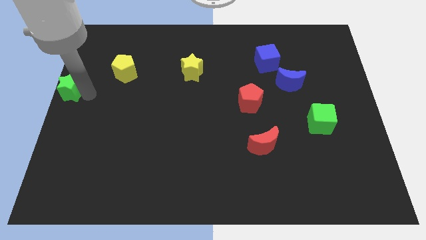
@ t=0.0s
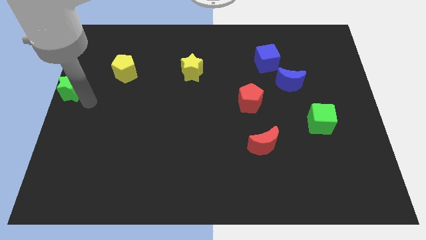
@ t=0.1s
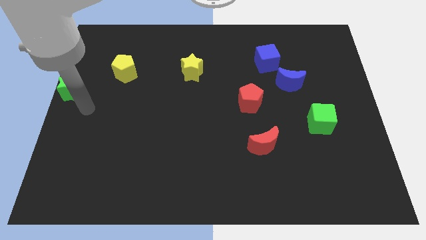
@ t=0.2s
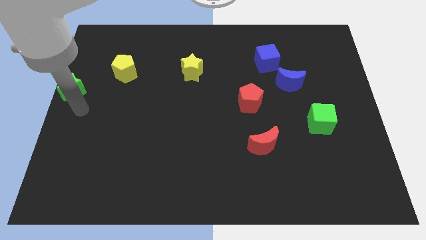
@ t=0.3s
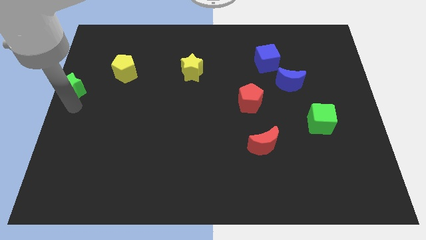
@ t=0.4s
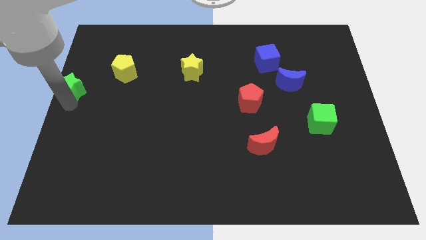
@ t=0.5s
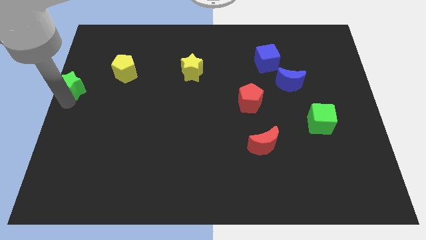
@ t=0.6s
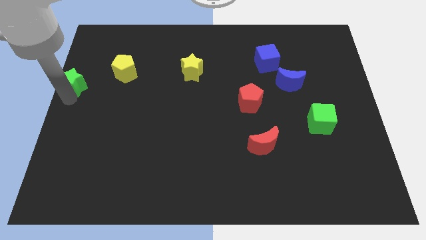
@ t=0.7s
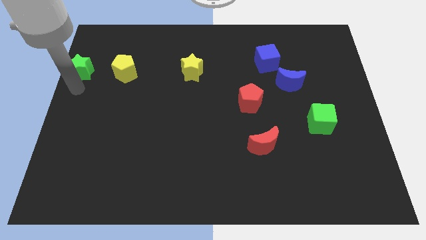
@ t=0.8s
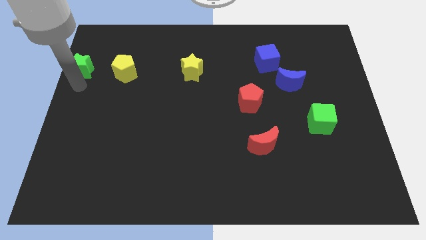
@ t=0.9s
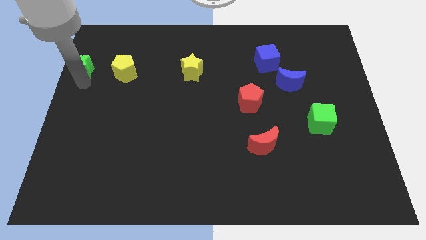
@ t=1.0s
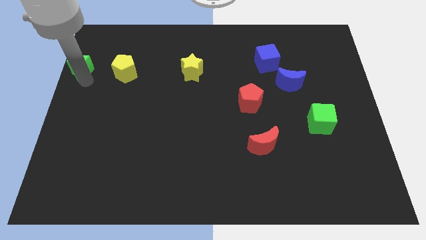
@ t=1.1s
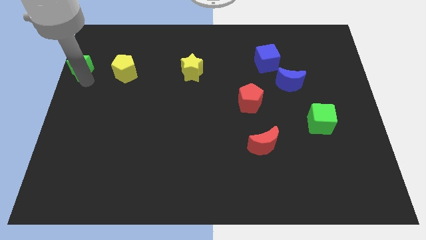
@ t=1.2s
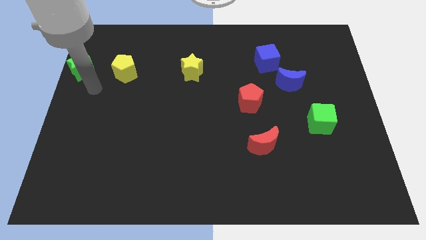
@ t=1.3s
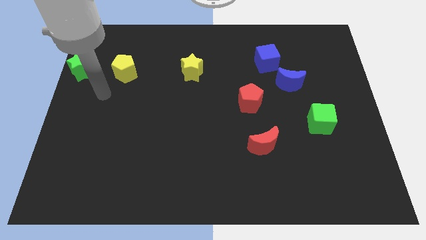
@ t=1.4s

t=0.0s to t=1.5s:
move the green star left beside the yellow pentagon

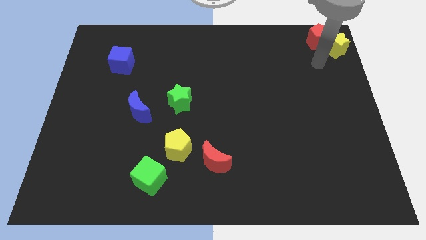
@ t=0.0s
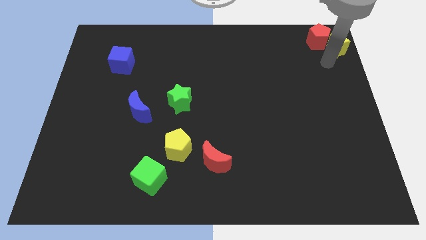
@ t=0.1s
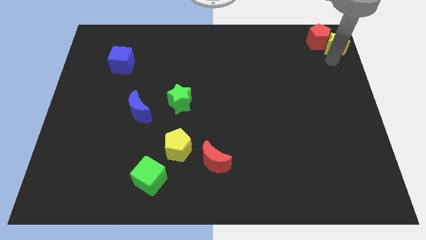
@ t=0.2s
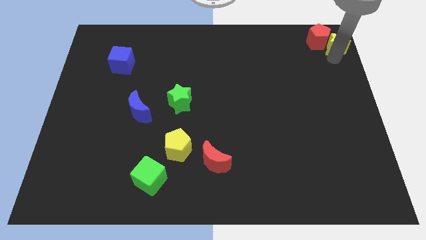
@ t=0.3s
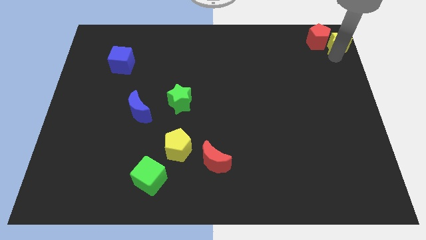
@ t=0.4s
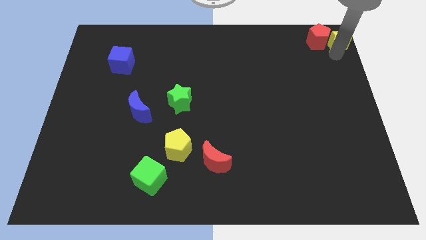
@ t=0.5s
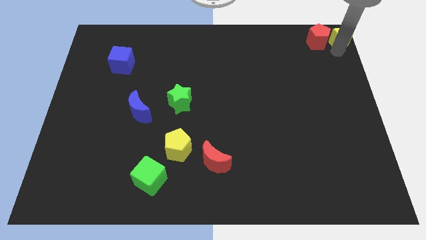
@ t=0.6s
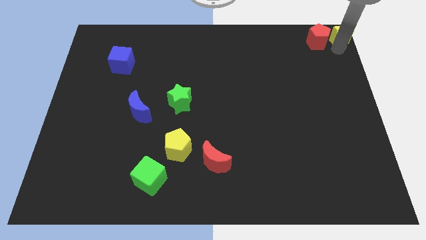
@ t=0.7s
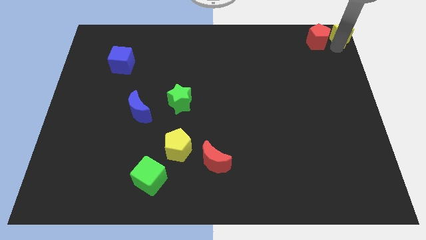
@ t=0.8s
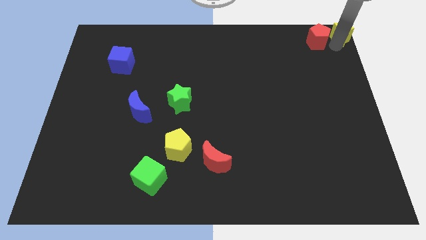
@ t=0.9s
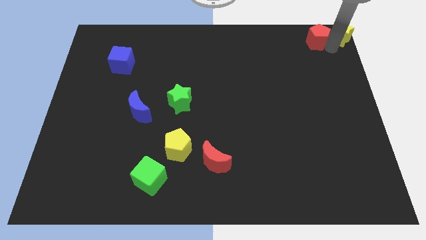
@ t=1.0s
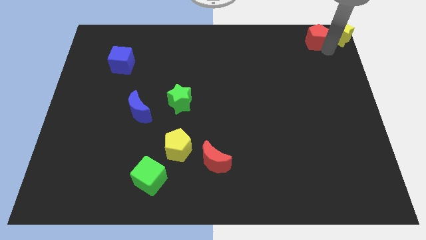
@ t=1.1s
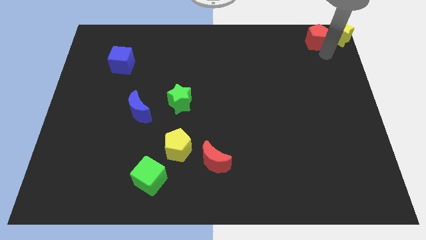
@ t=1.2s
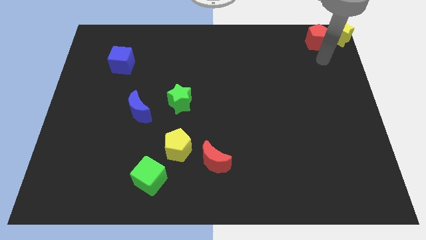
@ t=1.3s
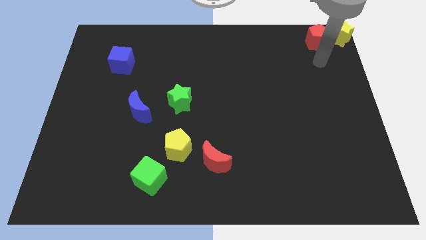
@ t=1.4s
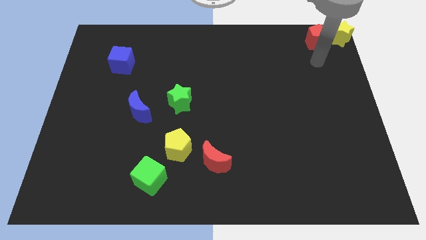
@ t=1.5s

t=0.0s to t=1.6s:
push the yellow star to the top right corner of board

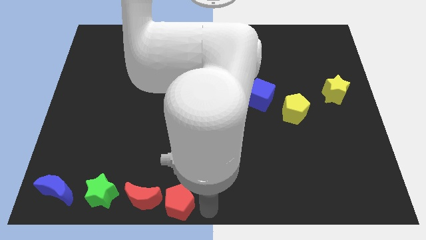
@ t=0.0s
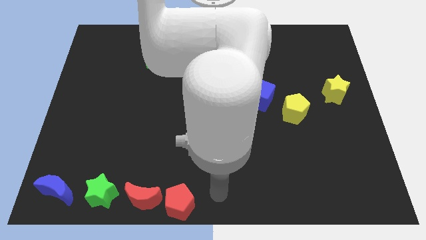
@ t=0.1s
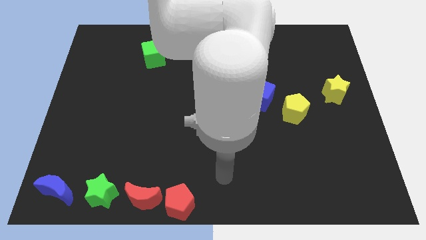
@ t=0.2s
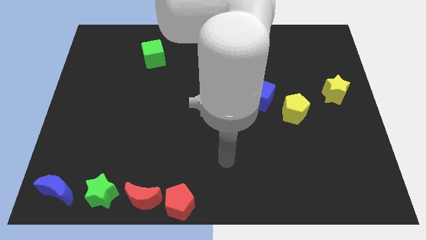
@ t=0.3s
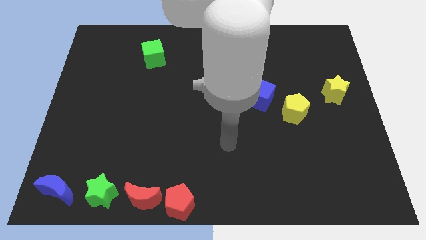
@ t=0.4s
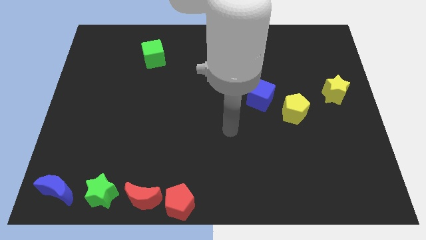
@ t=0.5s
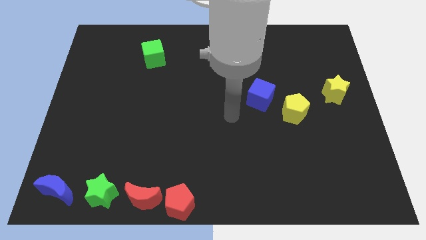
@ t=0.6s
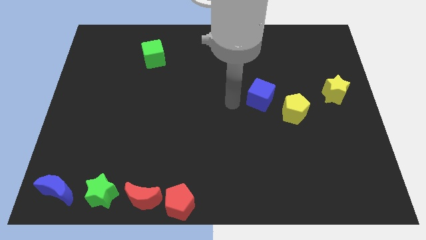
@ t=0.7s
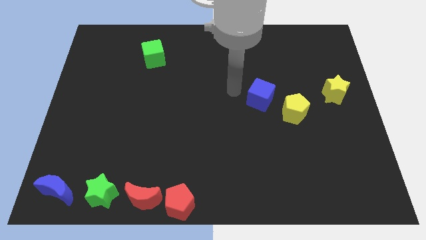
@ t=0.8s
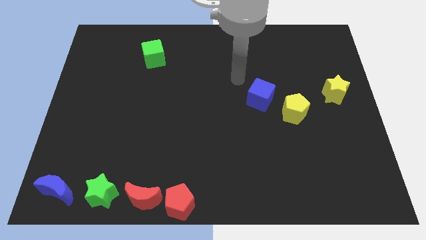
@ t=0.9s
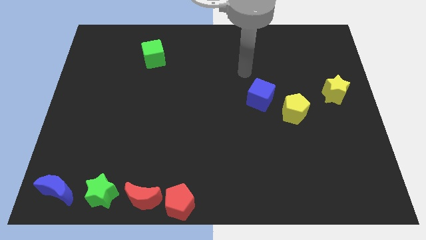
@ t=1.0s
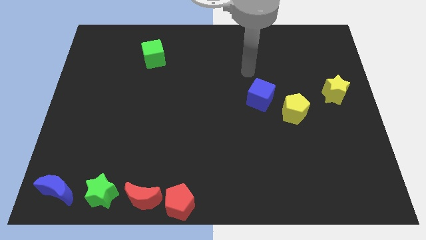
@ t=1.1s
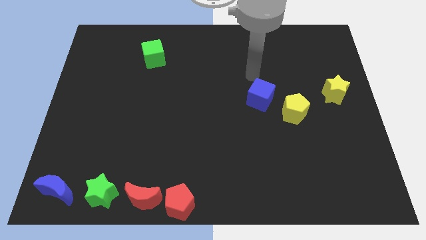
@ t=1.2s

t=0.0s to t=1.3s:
move your arm to the top side of the blue cube

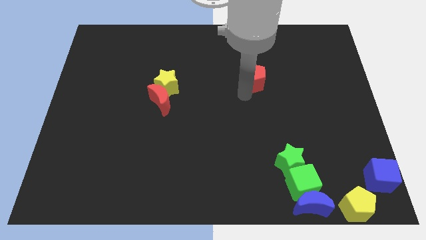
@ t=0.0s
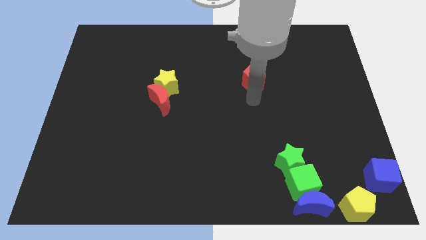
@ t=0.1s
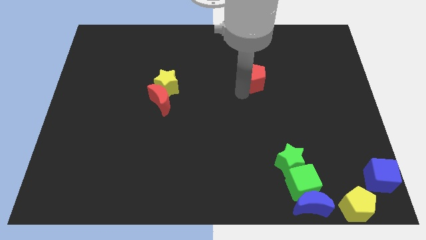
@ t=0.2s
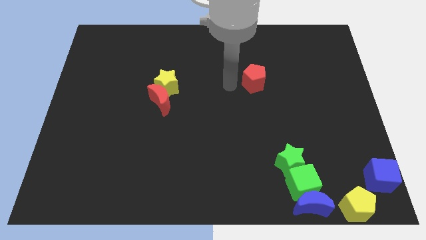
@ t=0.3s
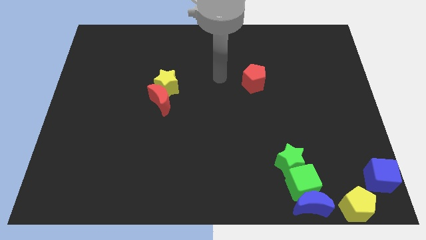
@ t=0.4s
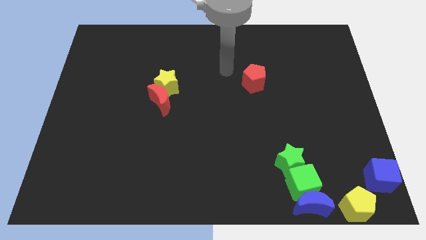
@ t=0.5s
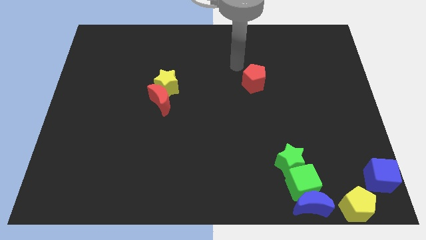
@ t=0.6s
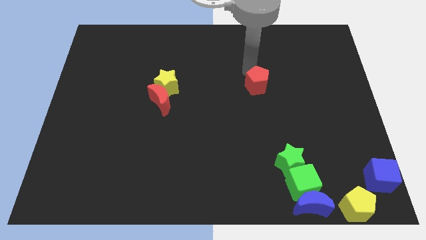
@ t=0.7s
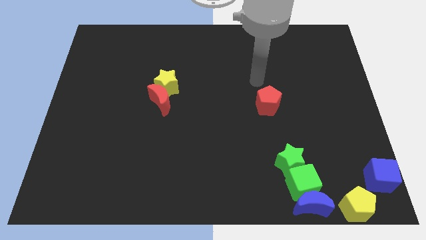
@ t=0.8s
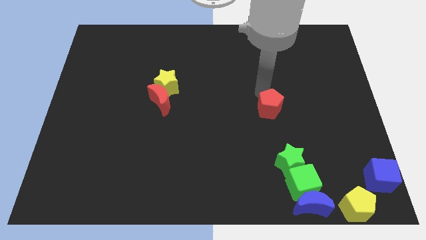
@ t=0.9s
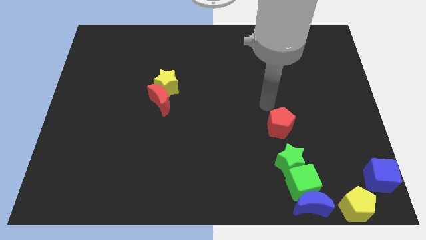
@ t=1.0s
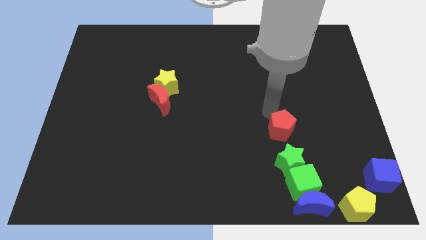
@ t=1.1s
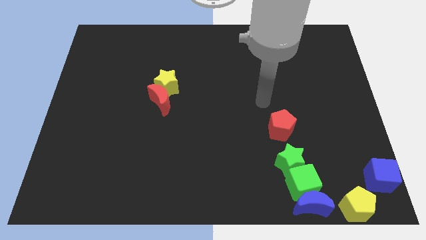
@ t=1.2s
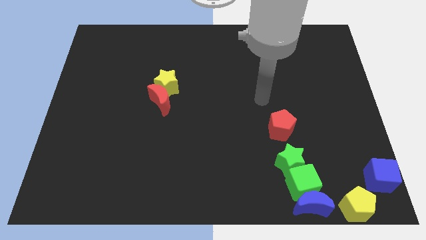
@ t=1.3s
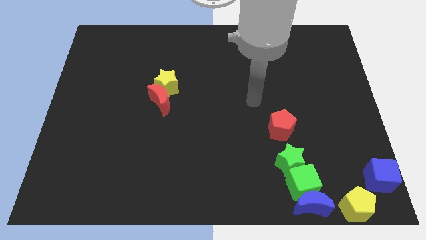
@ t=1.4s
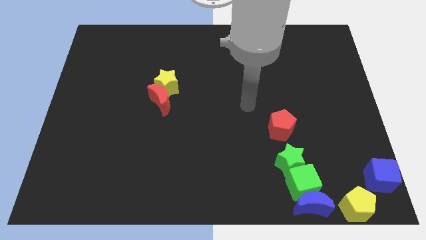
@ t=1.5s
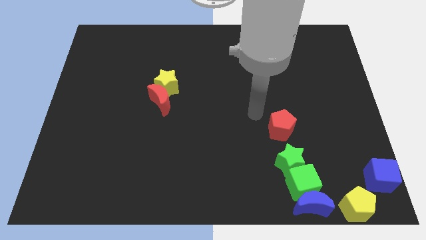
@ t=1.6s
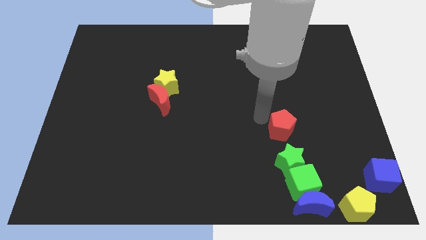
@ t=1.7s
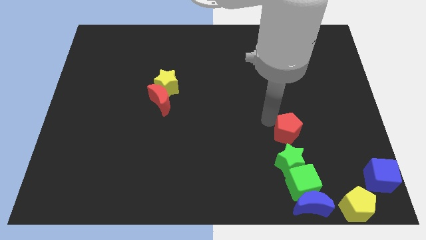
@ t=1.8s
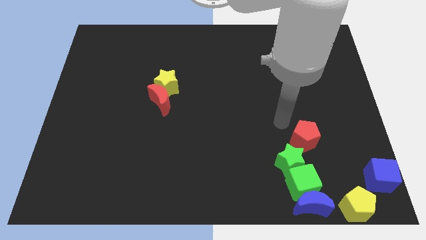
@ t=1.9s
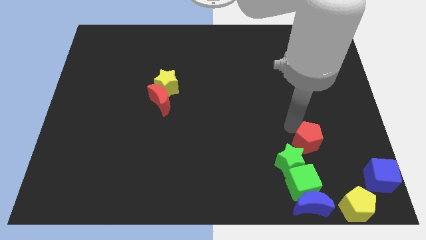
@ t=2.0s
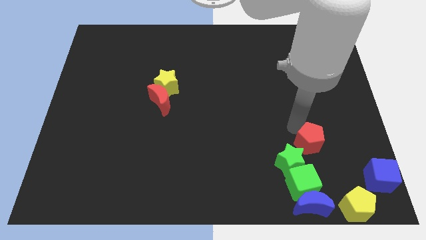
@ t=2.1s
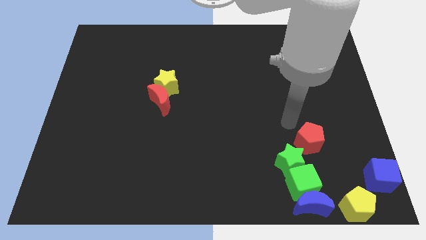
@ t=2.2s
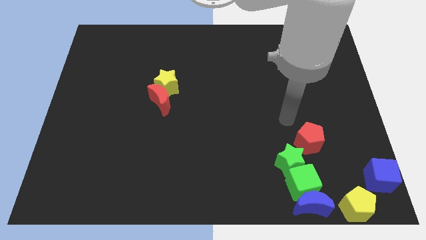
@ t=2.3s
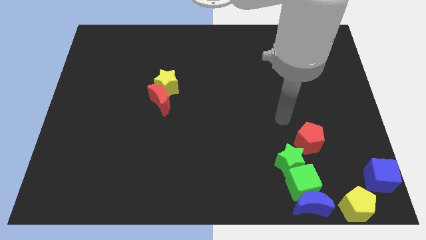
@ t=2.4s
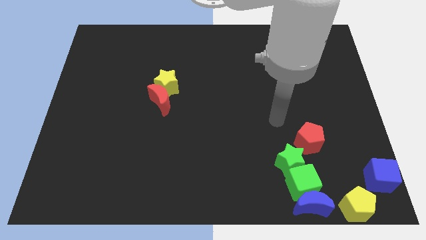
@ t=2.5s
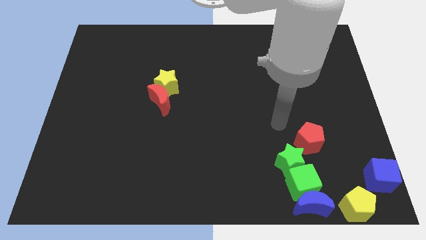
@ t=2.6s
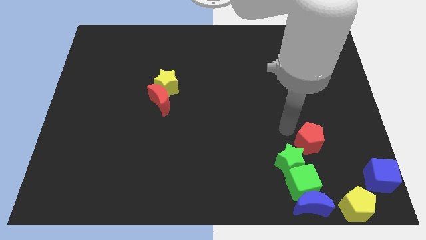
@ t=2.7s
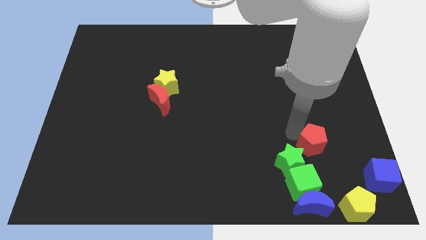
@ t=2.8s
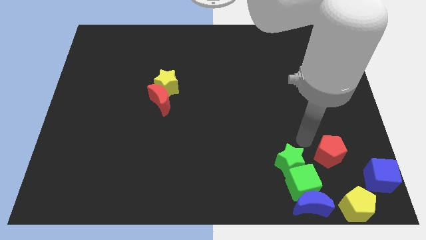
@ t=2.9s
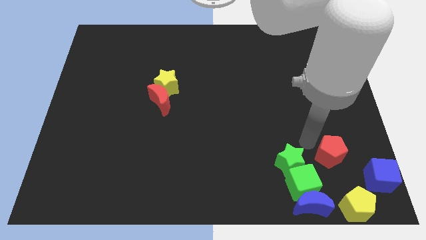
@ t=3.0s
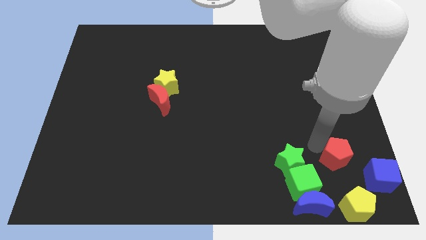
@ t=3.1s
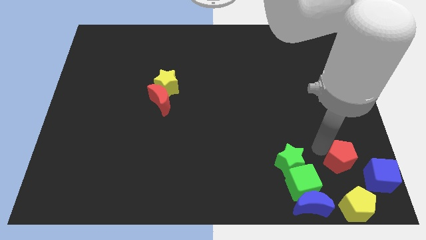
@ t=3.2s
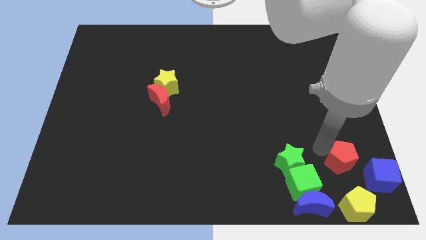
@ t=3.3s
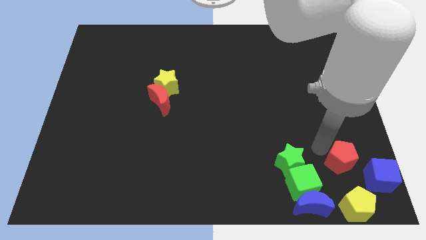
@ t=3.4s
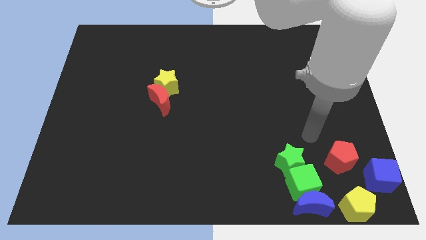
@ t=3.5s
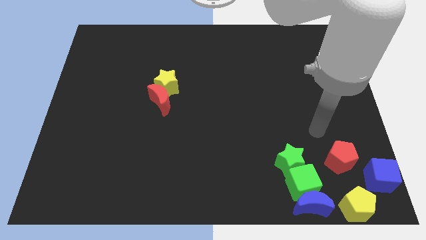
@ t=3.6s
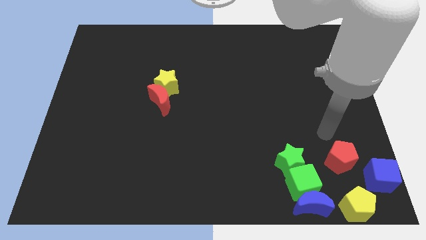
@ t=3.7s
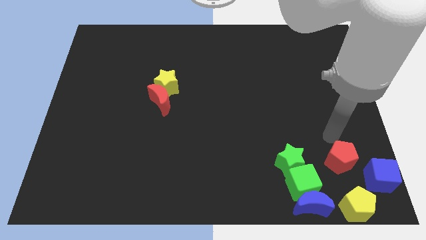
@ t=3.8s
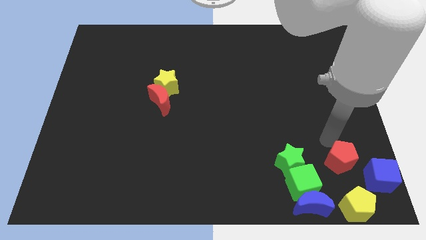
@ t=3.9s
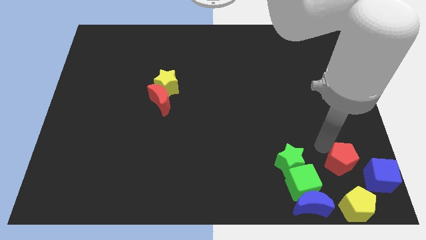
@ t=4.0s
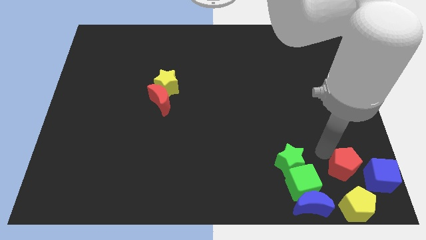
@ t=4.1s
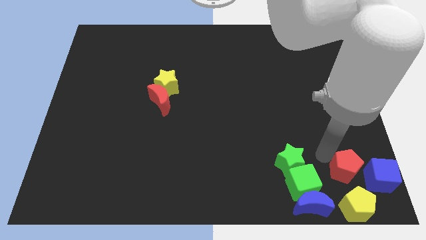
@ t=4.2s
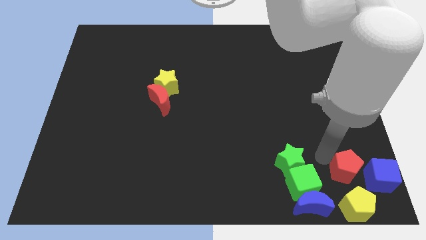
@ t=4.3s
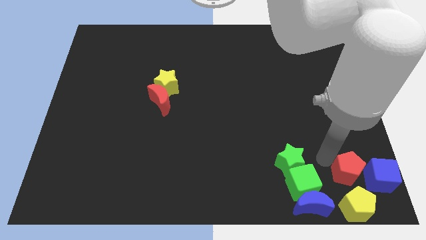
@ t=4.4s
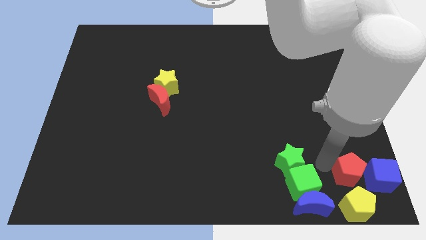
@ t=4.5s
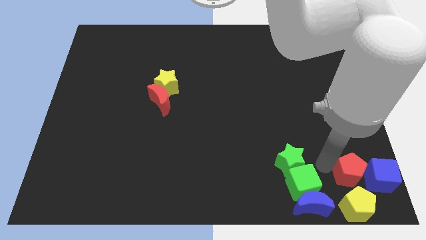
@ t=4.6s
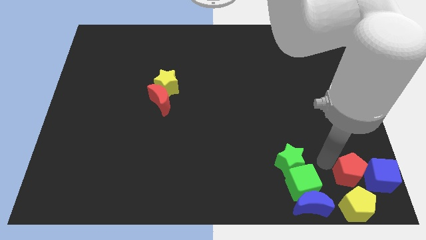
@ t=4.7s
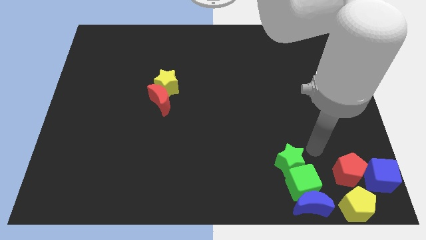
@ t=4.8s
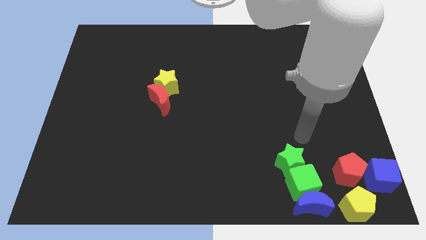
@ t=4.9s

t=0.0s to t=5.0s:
push the red pentagon to the left side of the blue cube
